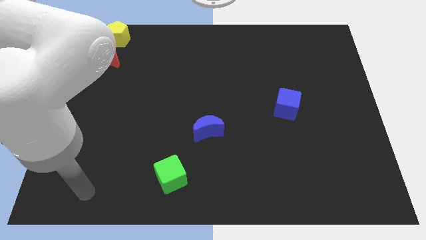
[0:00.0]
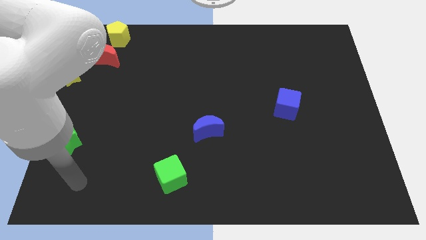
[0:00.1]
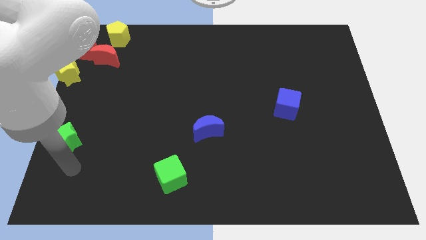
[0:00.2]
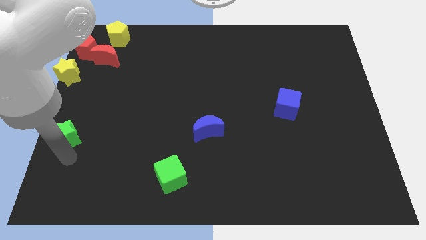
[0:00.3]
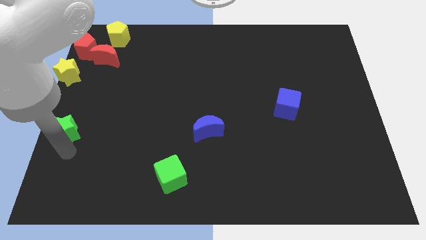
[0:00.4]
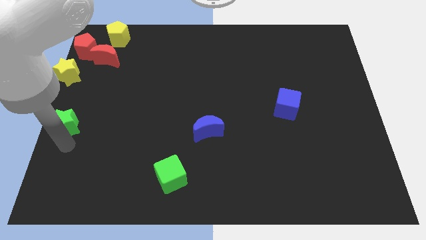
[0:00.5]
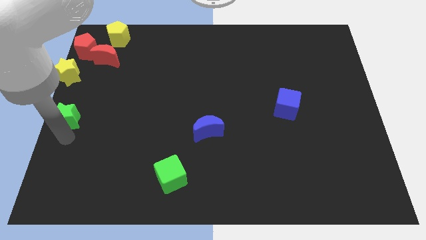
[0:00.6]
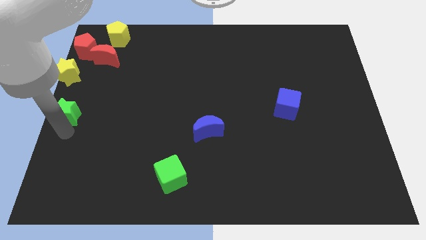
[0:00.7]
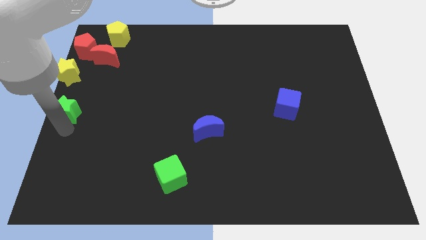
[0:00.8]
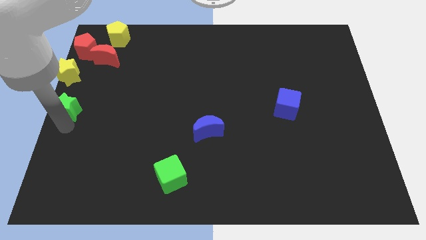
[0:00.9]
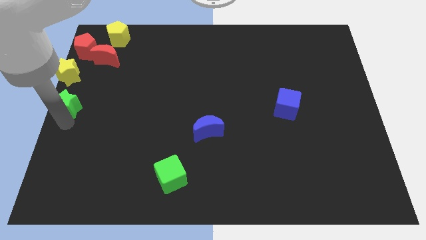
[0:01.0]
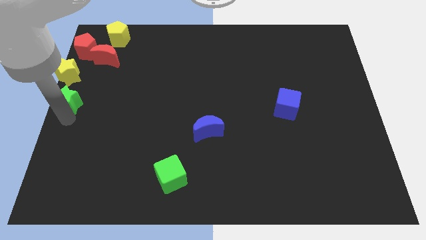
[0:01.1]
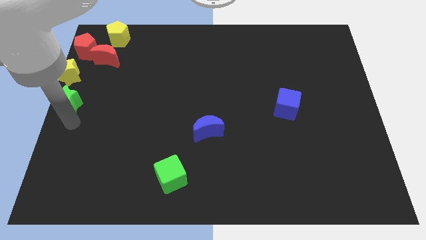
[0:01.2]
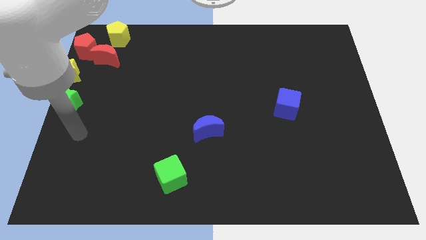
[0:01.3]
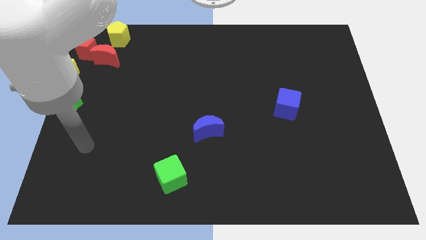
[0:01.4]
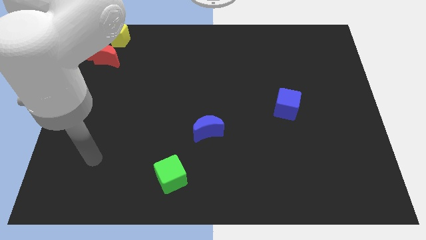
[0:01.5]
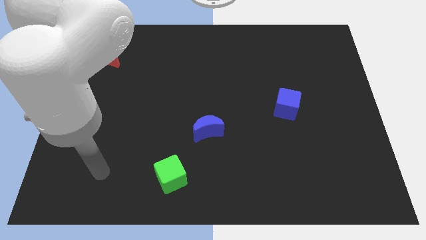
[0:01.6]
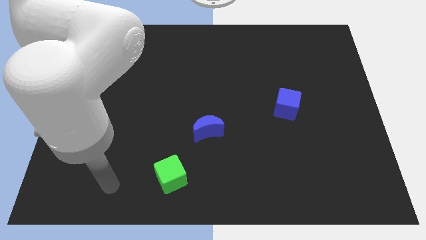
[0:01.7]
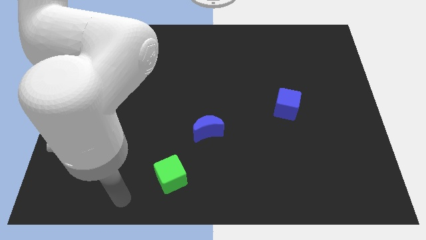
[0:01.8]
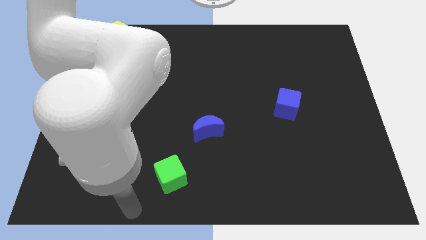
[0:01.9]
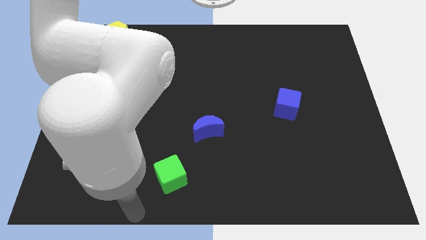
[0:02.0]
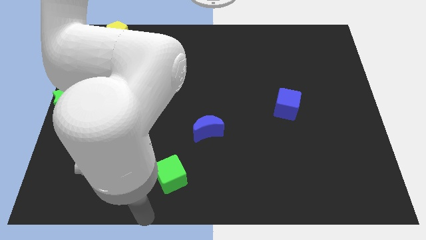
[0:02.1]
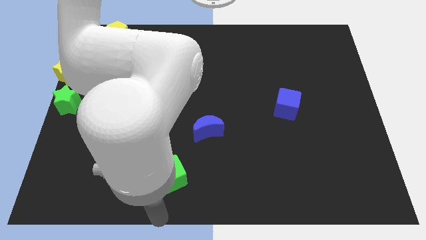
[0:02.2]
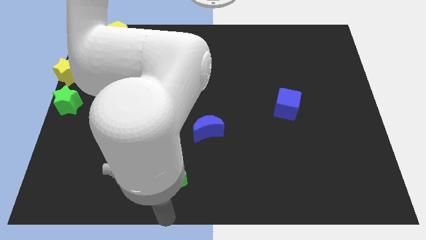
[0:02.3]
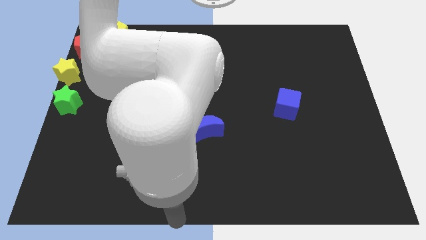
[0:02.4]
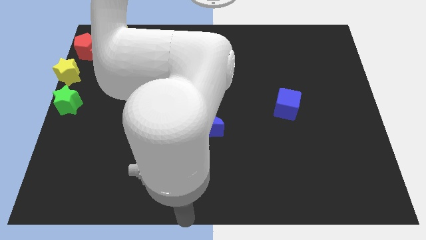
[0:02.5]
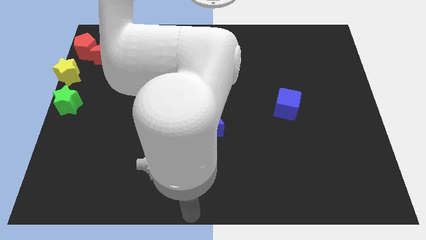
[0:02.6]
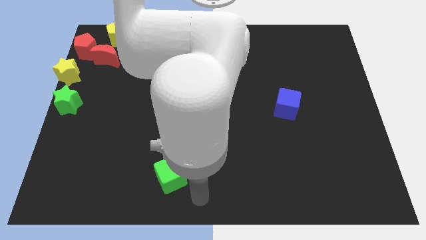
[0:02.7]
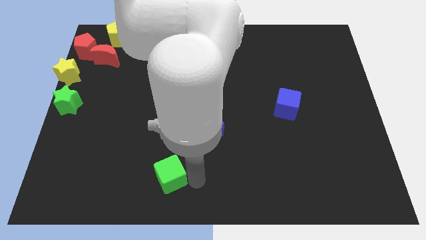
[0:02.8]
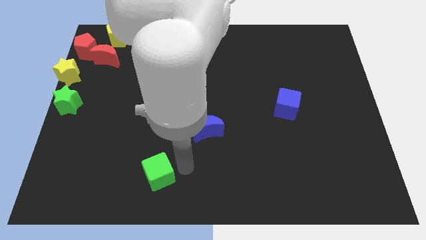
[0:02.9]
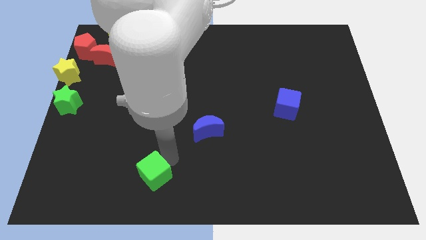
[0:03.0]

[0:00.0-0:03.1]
place a green star on the center left of the board

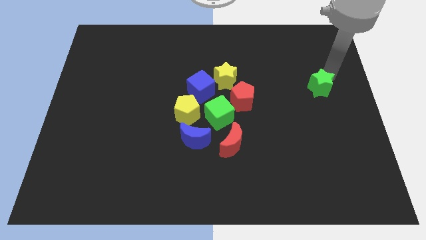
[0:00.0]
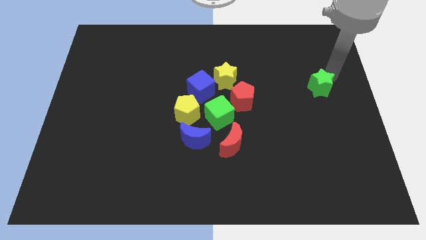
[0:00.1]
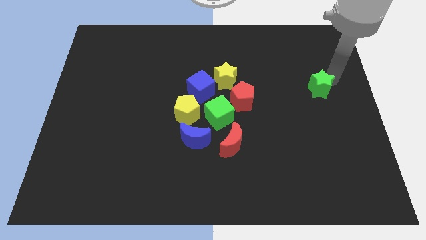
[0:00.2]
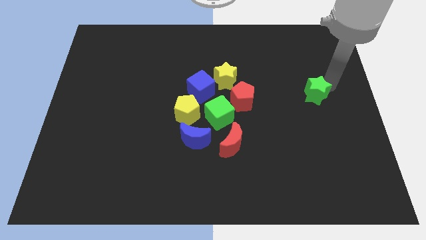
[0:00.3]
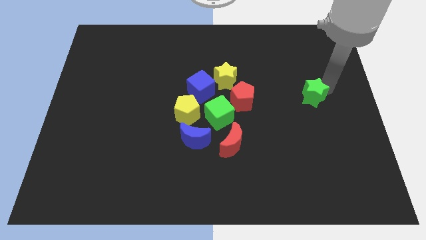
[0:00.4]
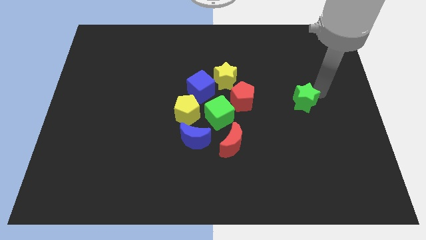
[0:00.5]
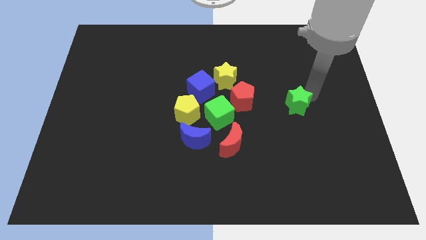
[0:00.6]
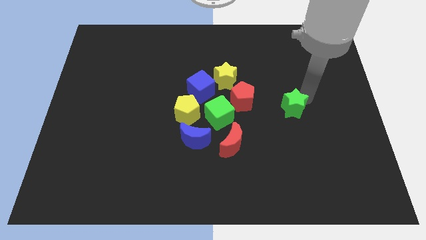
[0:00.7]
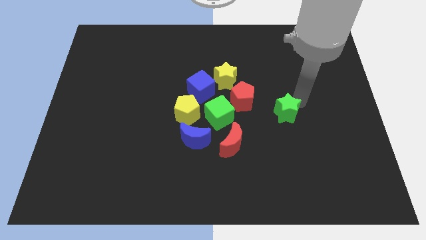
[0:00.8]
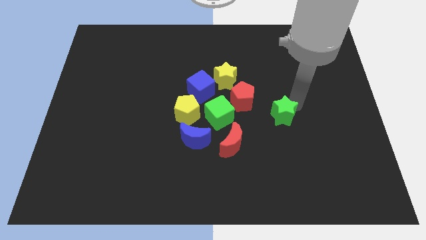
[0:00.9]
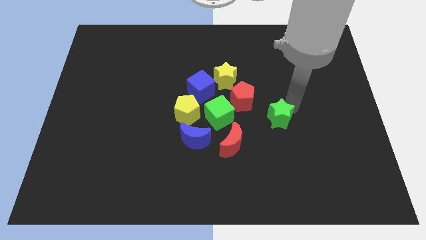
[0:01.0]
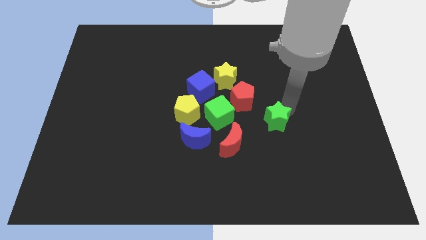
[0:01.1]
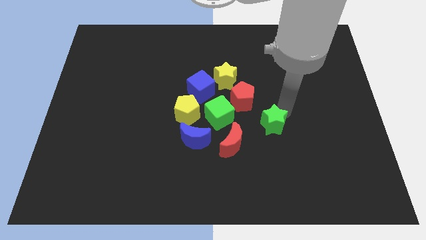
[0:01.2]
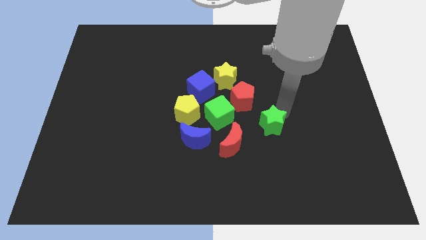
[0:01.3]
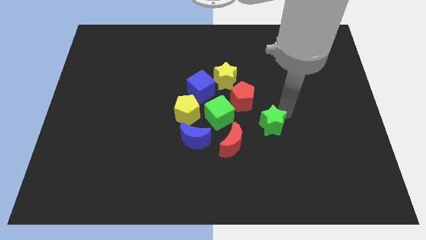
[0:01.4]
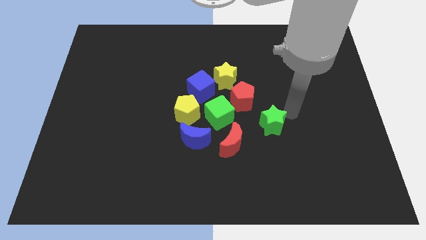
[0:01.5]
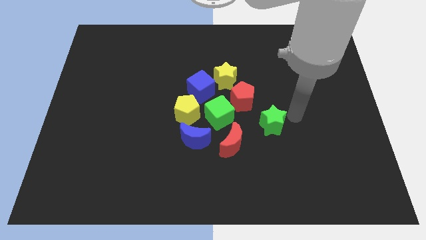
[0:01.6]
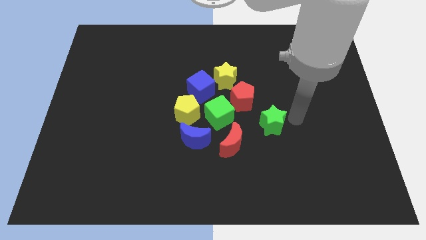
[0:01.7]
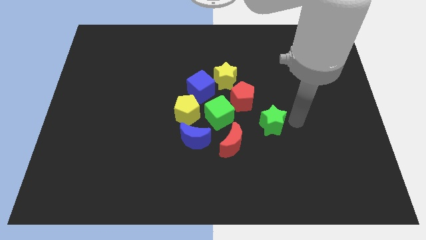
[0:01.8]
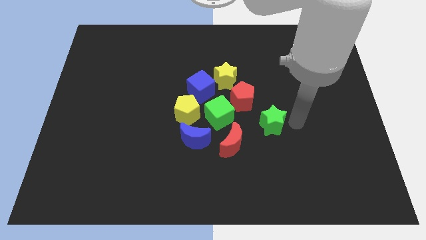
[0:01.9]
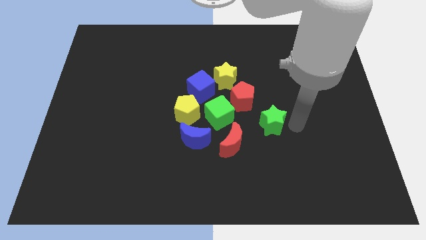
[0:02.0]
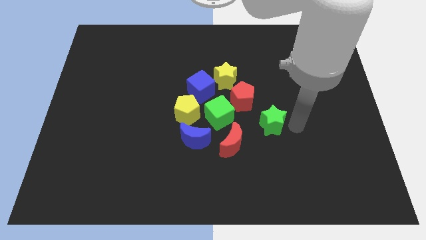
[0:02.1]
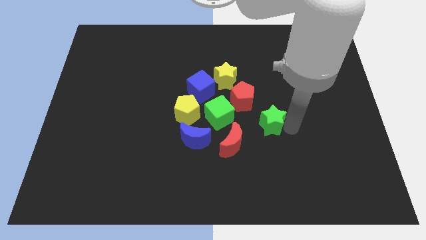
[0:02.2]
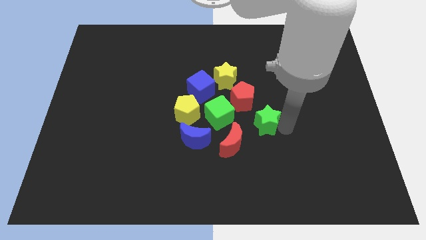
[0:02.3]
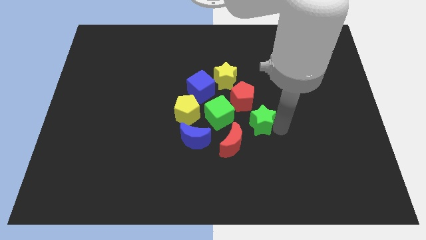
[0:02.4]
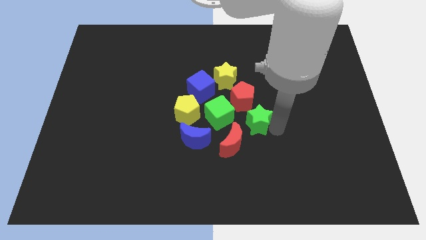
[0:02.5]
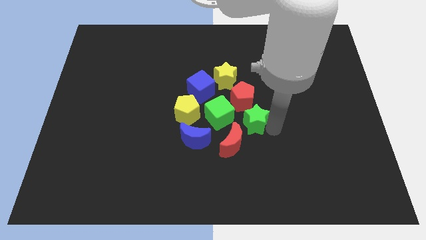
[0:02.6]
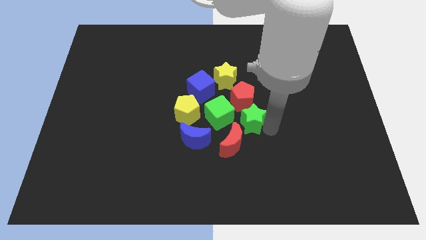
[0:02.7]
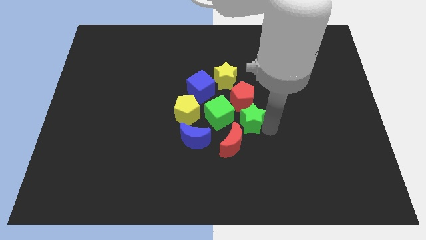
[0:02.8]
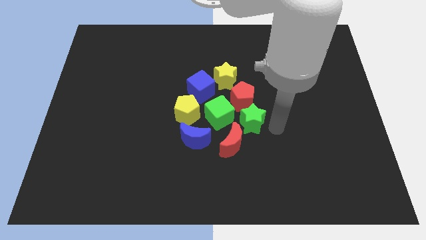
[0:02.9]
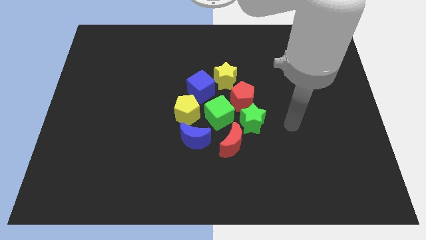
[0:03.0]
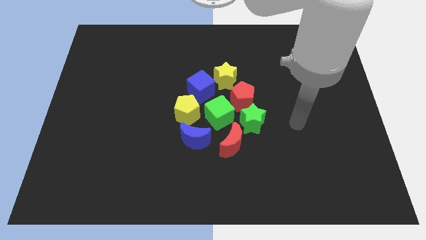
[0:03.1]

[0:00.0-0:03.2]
push the green star top right to the red crescent

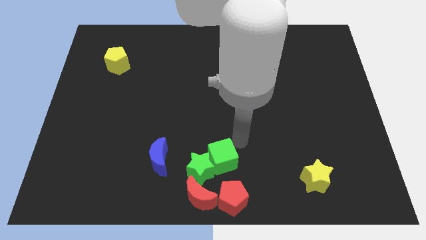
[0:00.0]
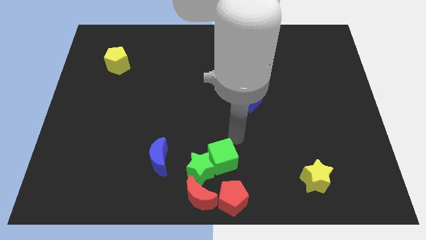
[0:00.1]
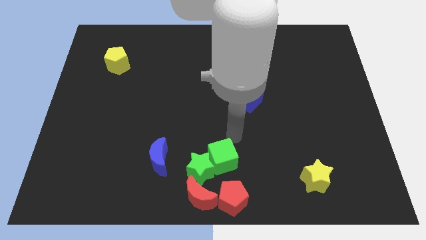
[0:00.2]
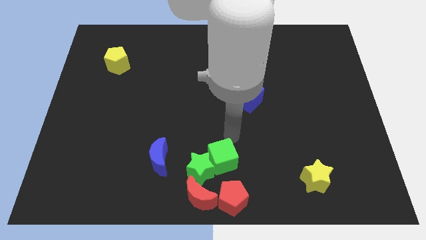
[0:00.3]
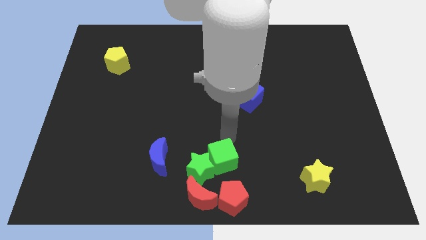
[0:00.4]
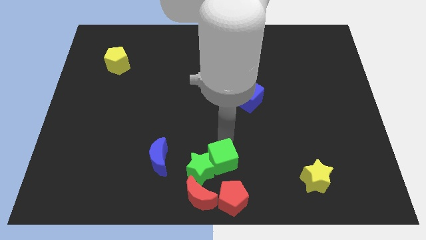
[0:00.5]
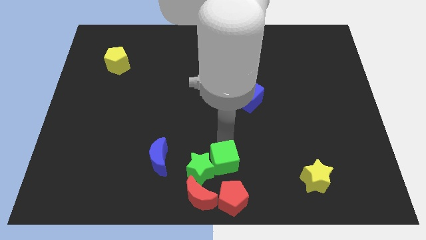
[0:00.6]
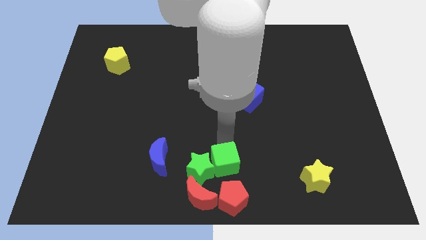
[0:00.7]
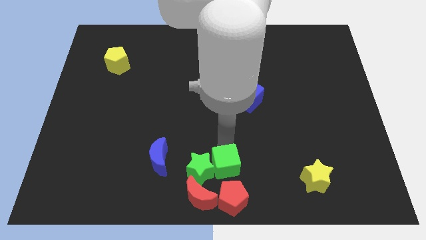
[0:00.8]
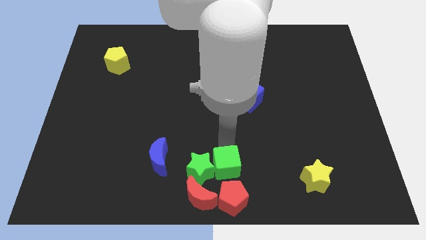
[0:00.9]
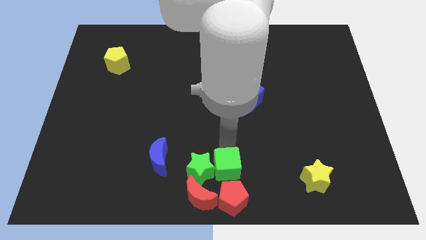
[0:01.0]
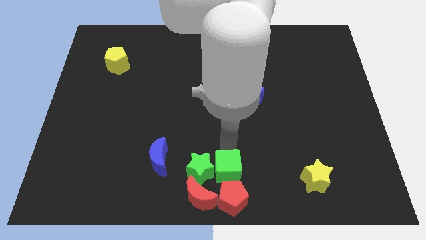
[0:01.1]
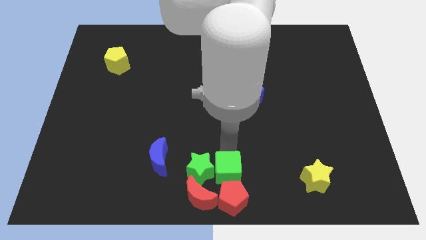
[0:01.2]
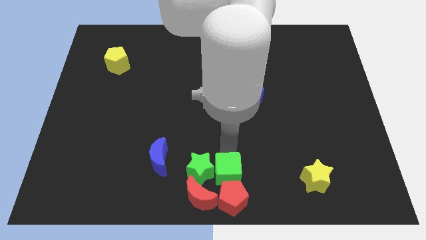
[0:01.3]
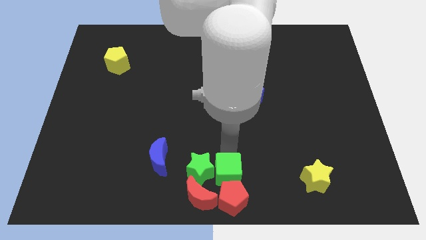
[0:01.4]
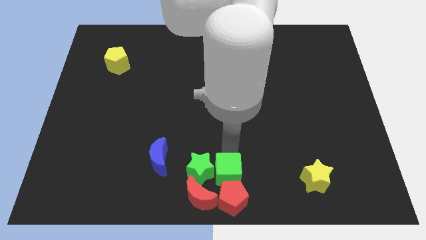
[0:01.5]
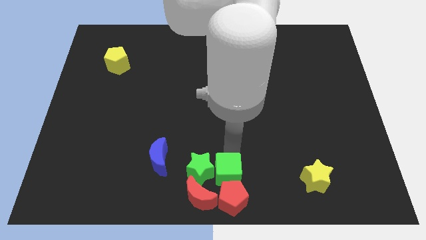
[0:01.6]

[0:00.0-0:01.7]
place the green cube above the red pentagon

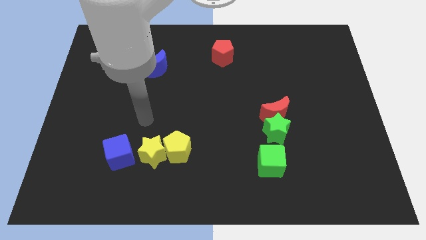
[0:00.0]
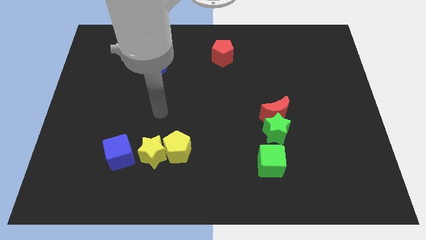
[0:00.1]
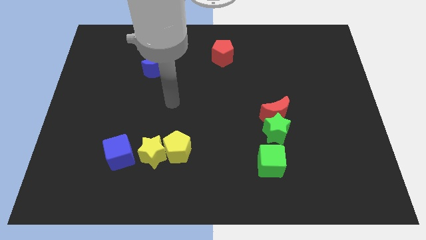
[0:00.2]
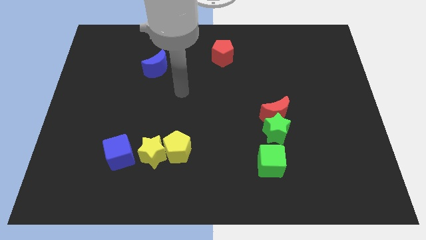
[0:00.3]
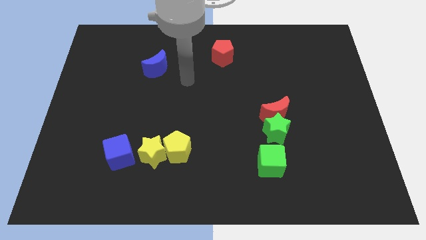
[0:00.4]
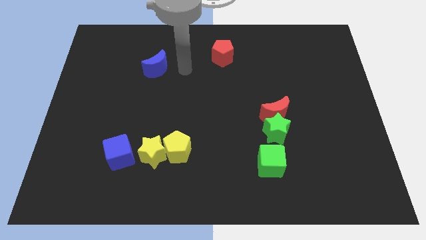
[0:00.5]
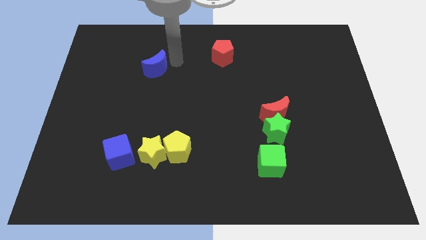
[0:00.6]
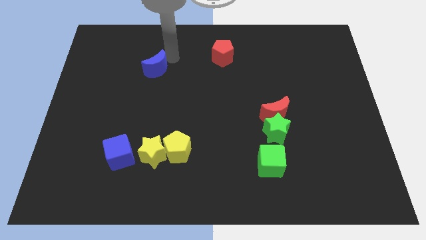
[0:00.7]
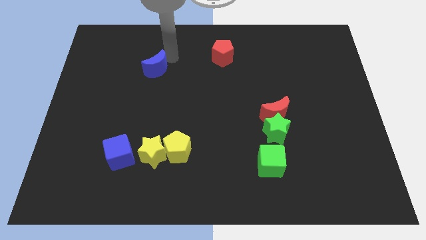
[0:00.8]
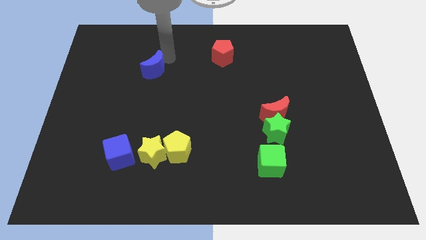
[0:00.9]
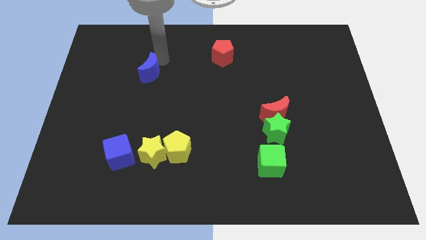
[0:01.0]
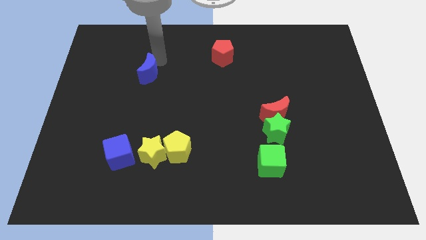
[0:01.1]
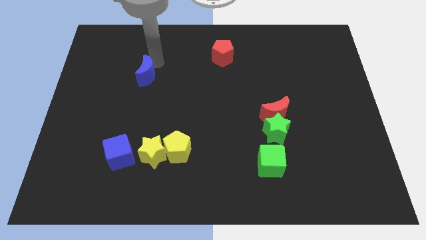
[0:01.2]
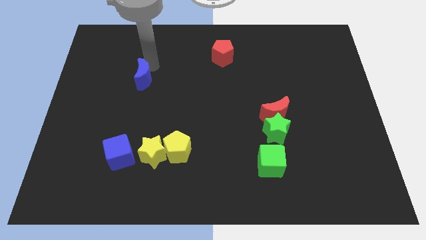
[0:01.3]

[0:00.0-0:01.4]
push the blue crescent slightly to the bottom
